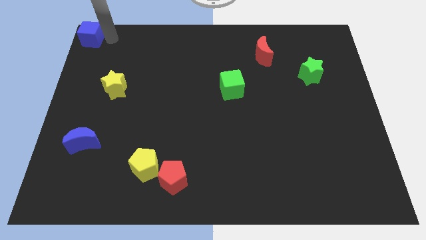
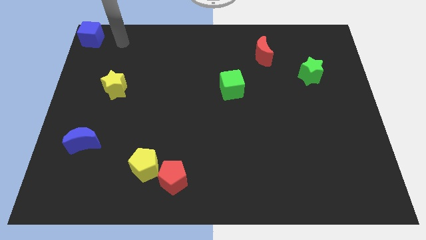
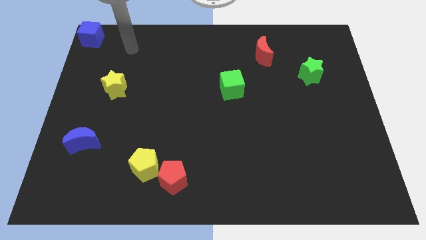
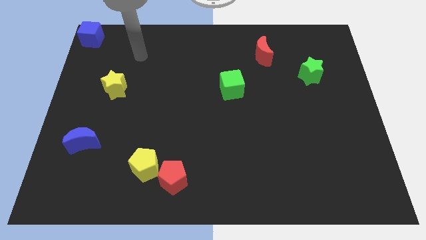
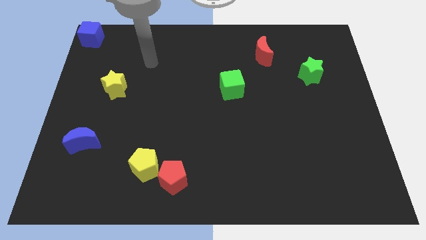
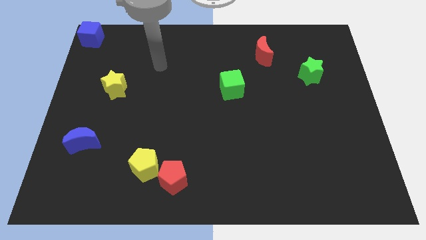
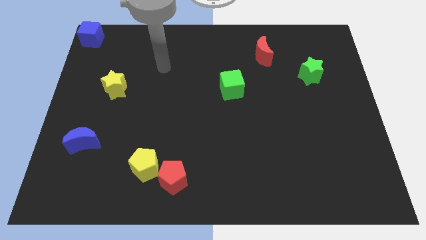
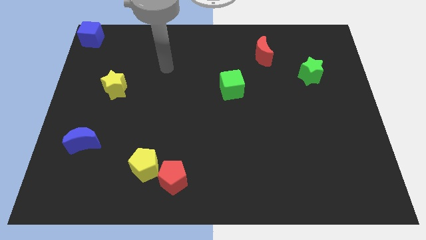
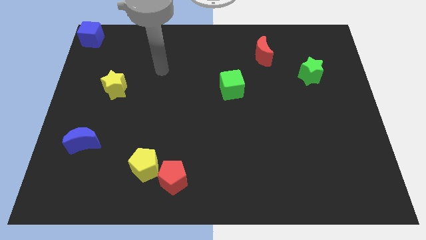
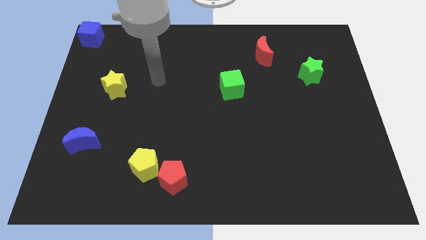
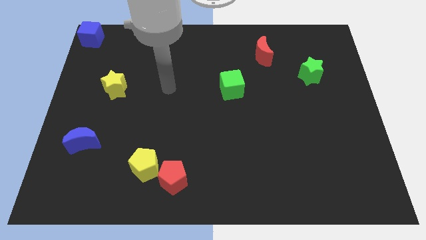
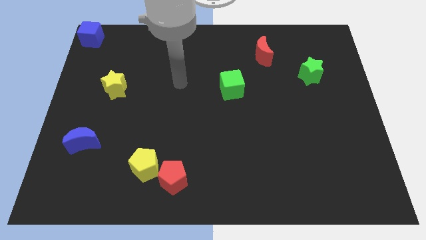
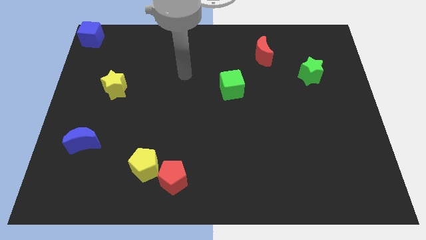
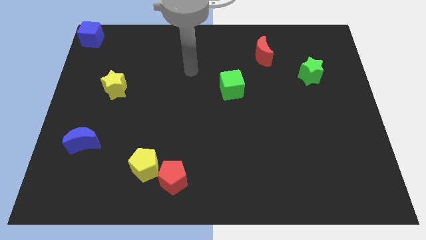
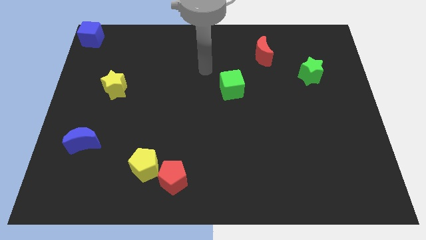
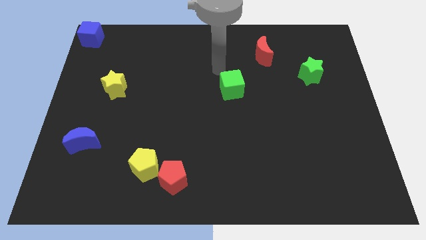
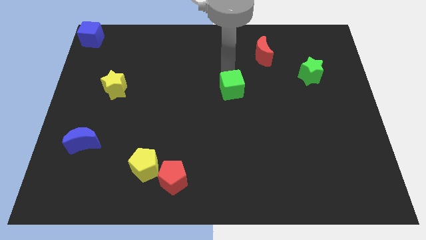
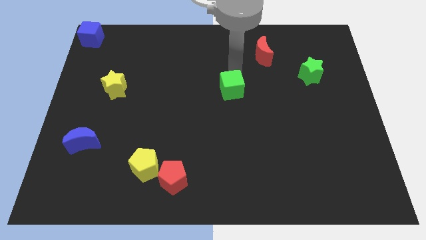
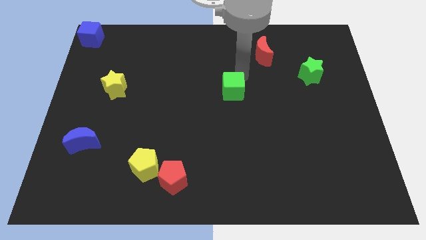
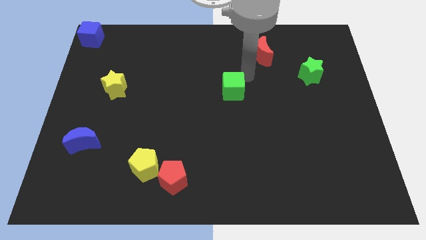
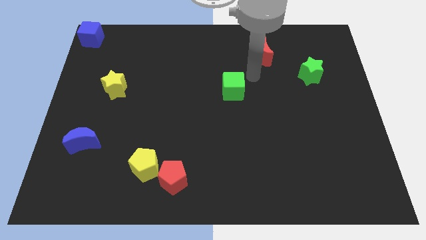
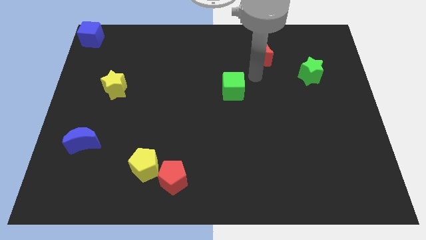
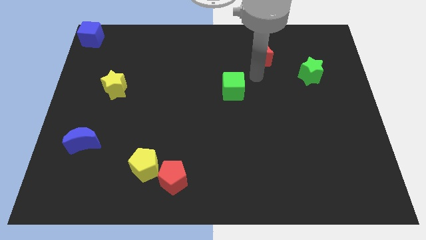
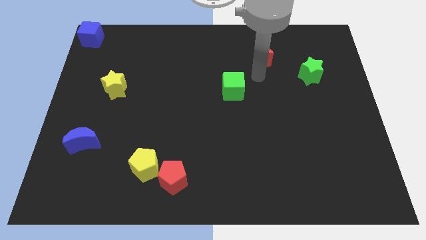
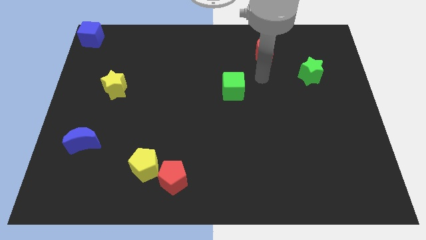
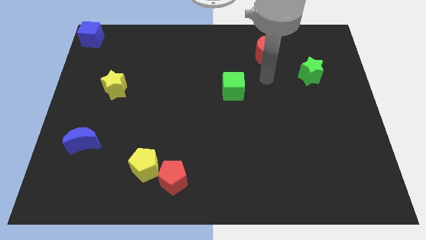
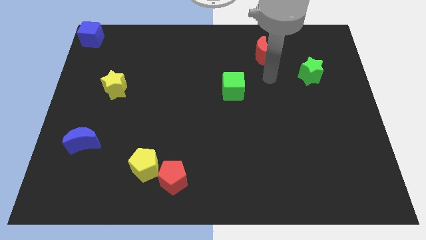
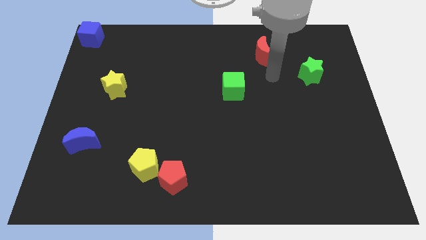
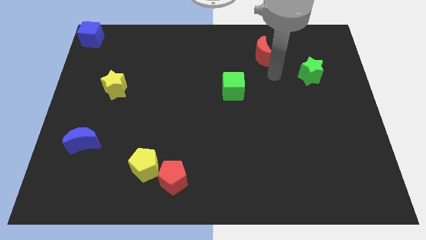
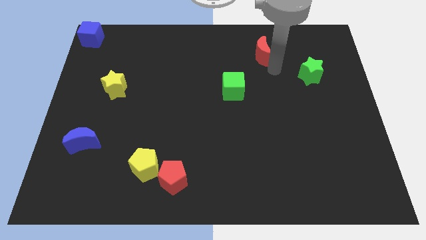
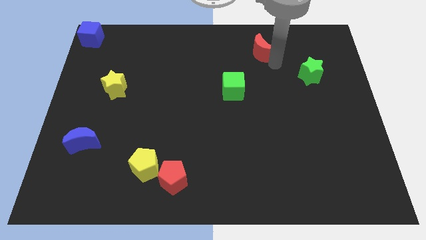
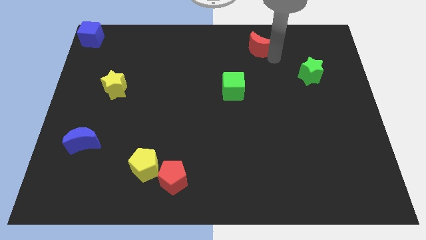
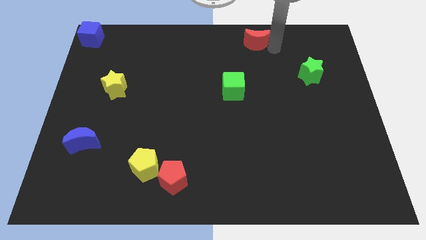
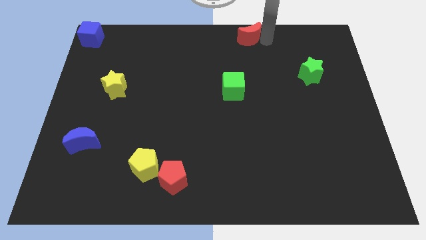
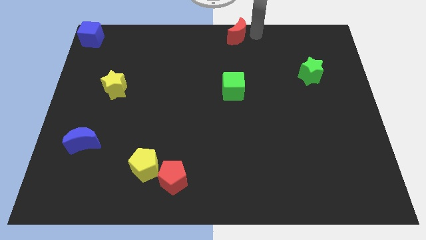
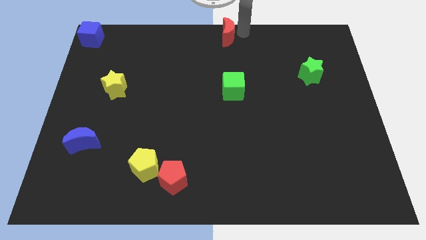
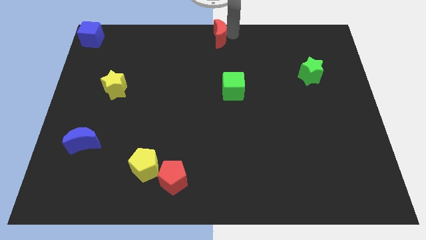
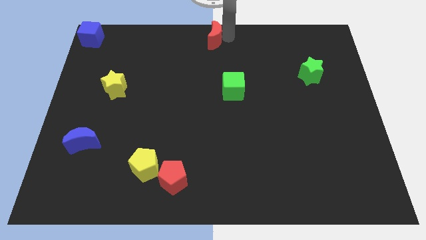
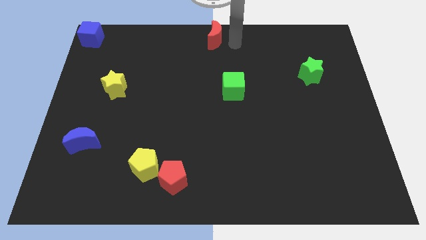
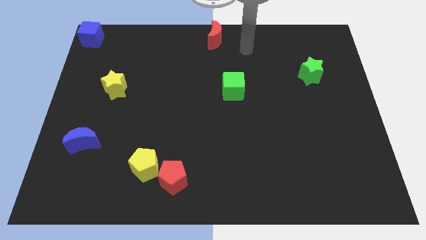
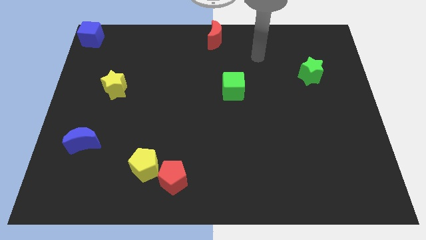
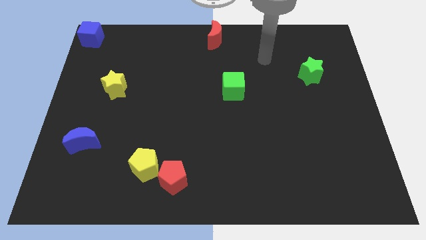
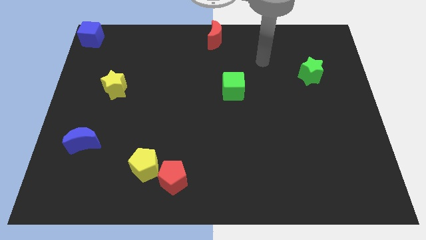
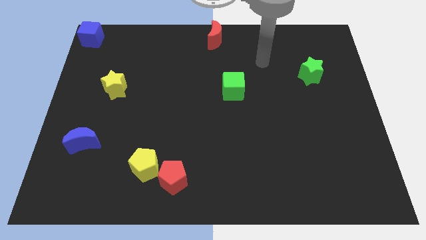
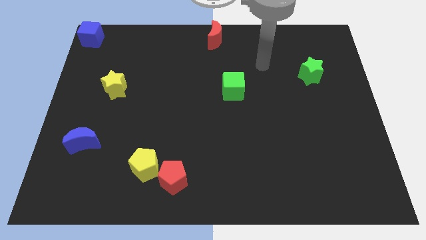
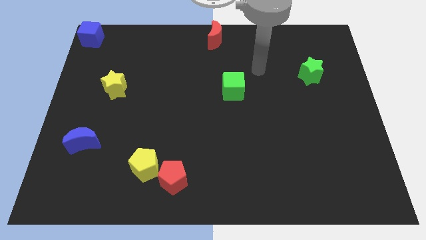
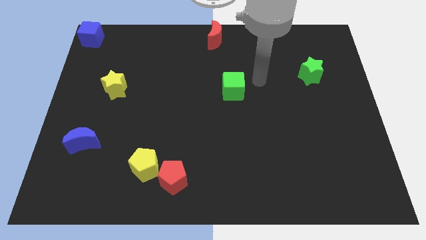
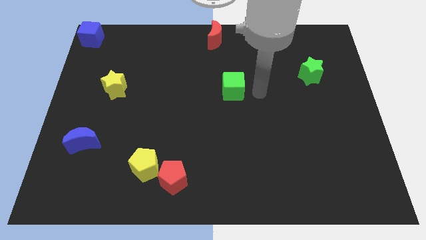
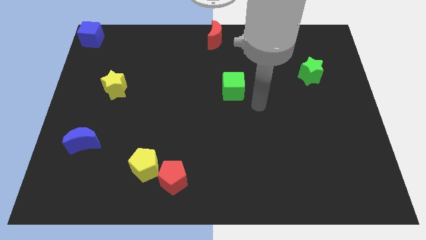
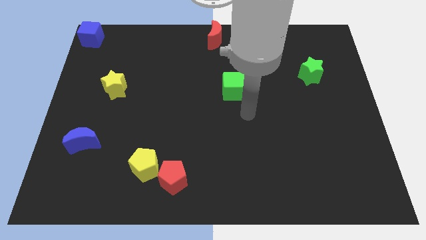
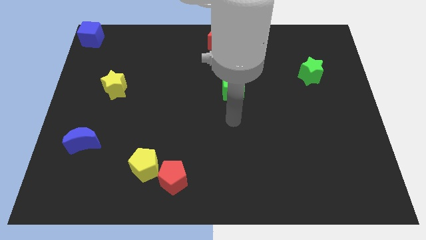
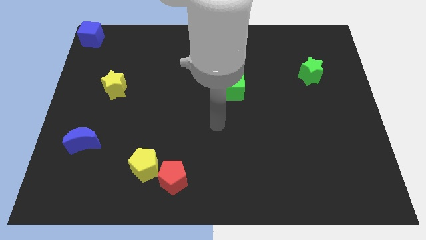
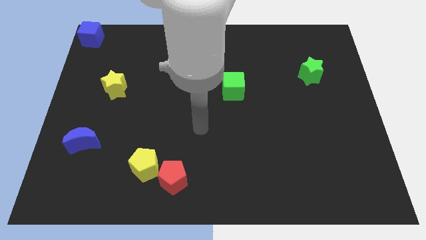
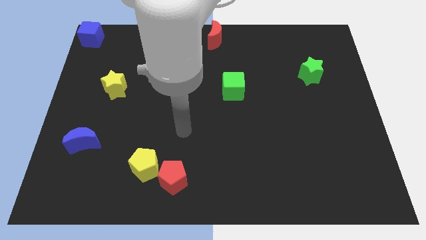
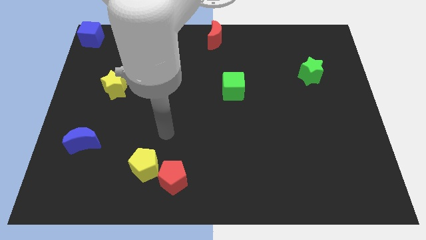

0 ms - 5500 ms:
place the red moon at the top of the green cube

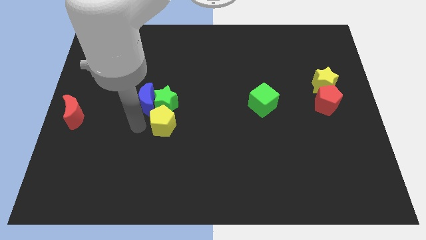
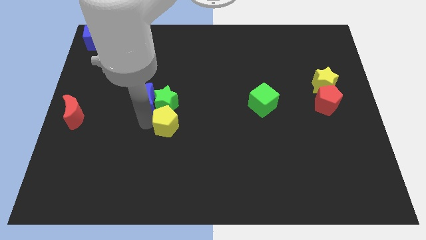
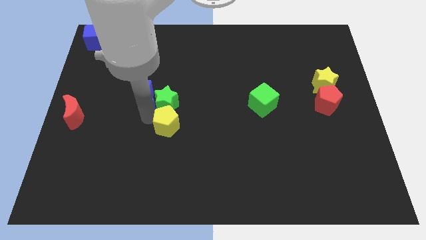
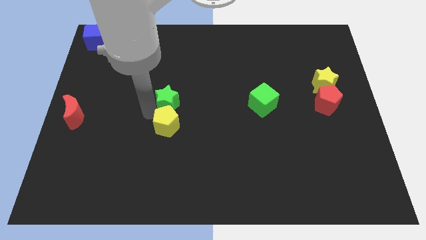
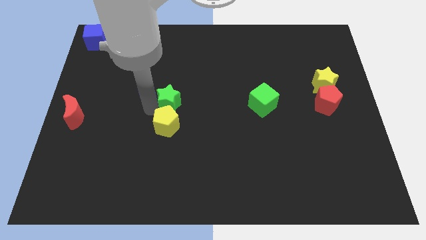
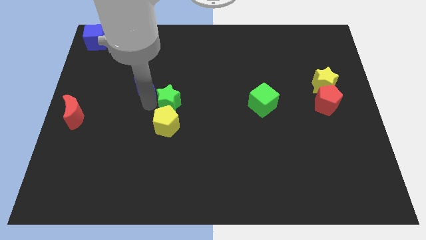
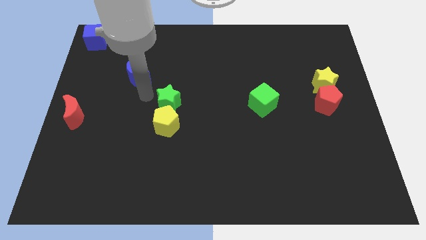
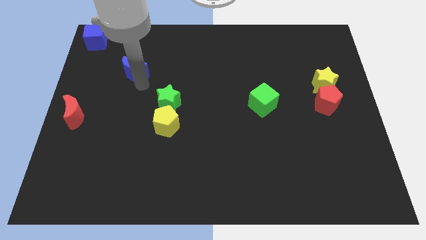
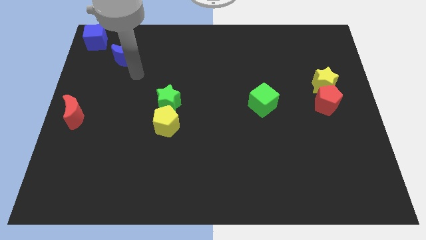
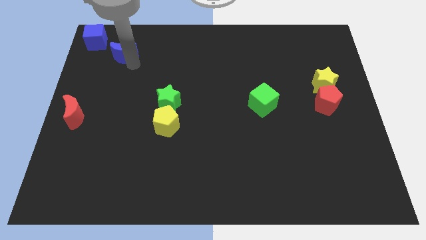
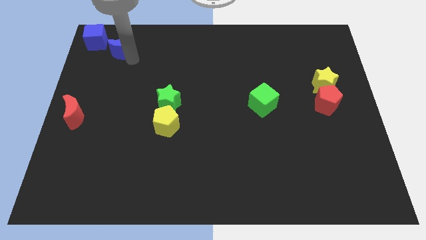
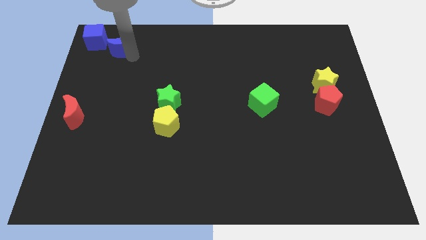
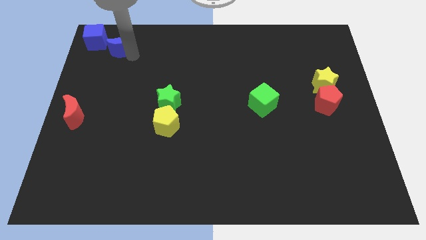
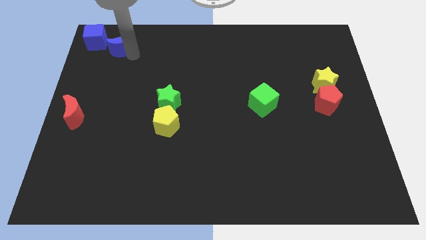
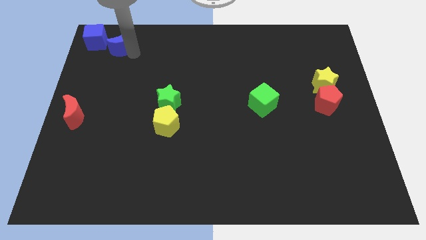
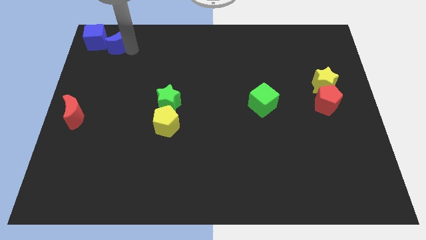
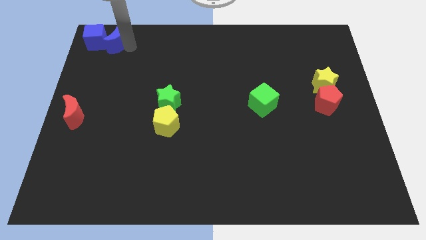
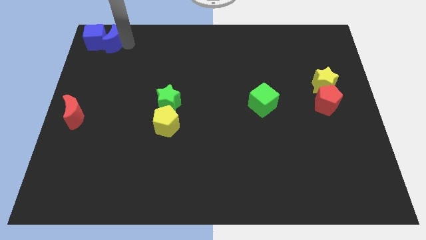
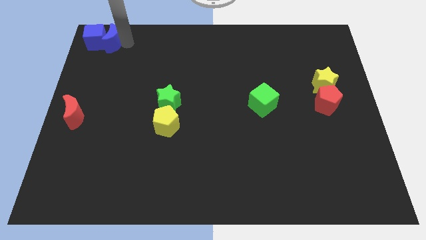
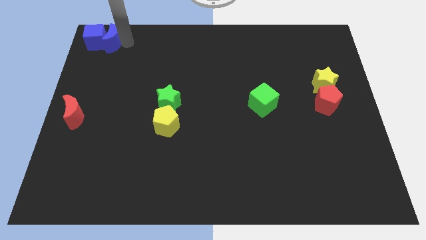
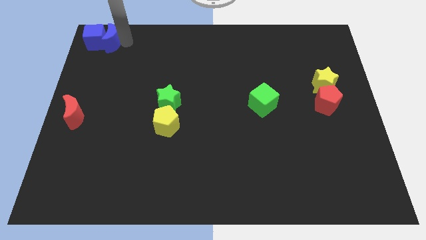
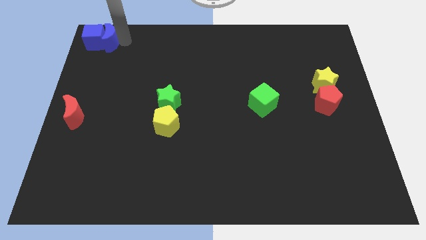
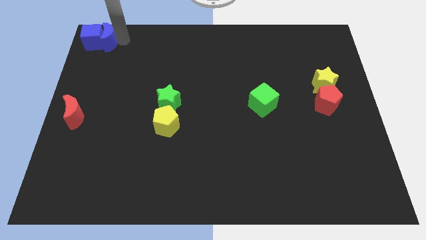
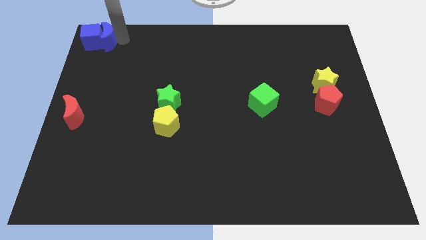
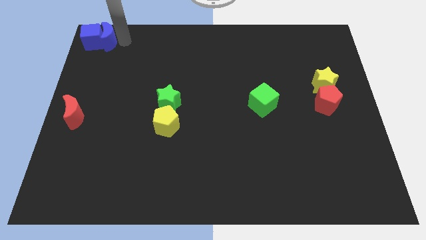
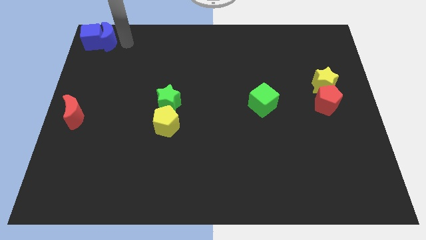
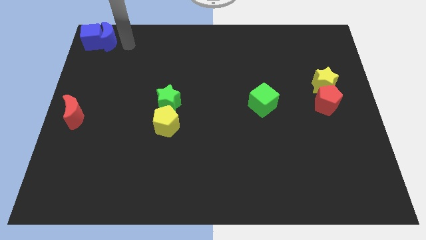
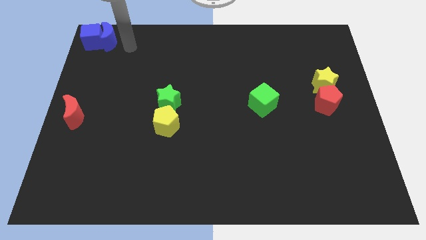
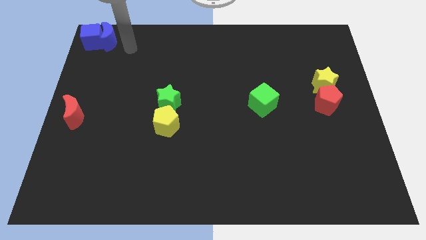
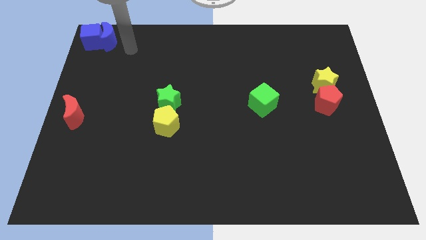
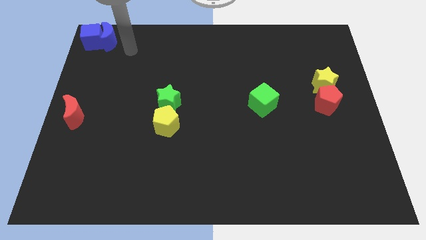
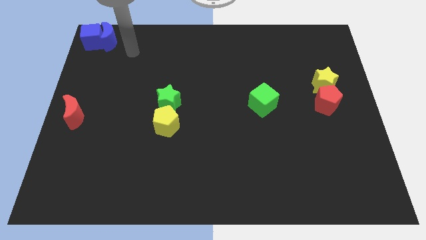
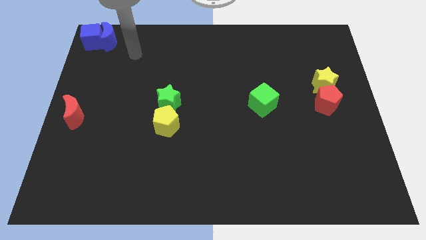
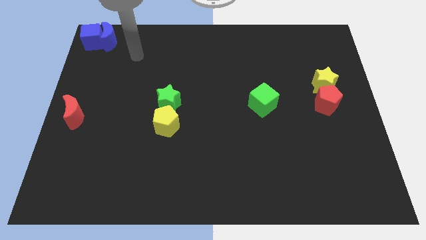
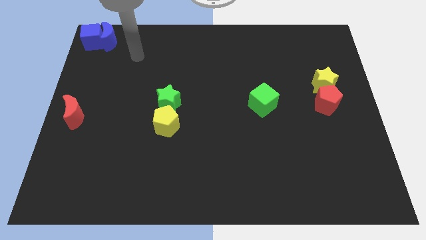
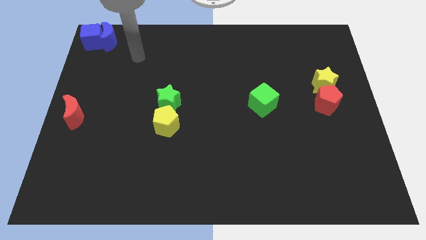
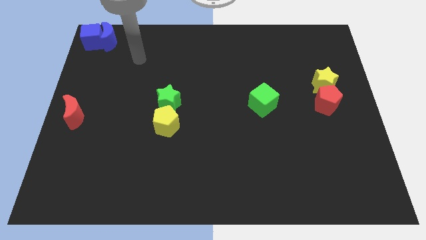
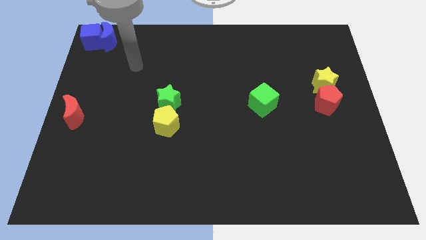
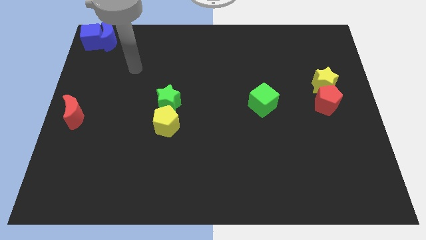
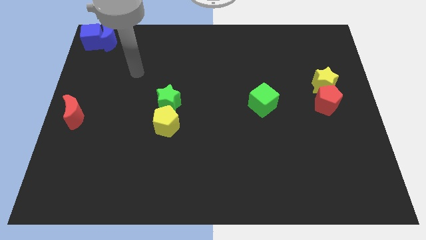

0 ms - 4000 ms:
move the blue moon right beside the blue cube
